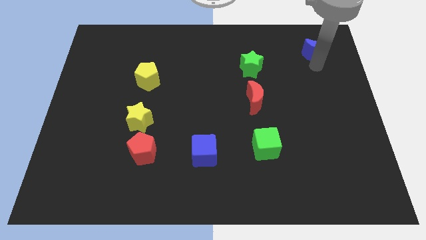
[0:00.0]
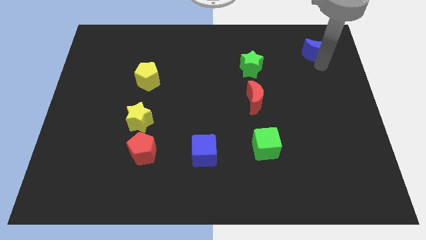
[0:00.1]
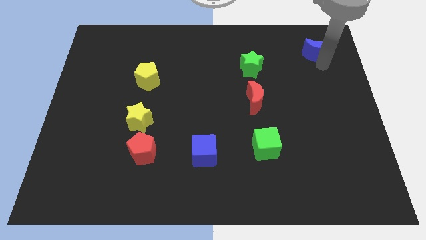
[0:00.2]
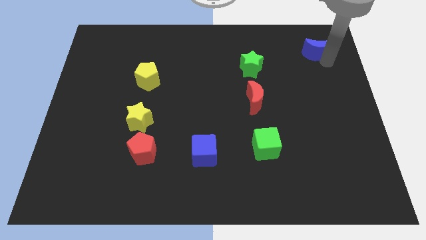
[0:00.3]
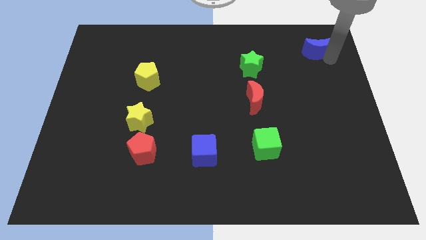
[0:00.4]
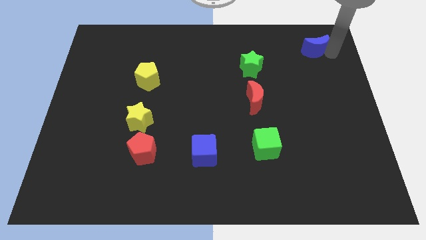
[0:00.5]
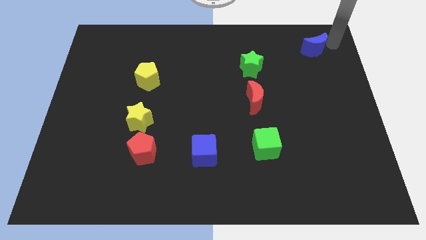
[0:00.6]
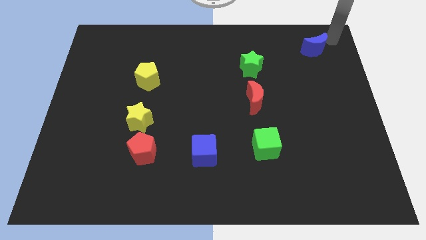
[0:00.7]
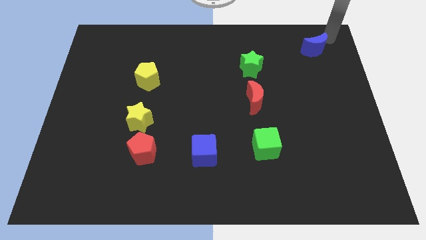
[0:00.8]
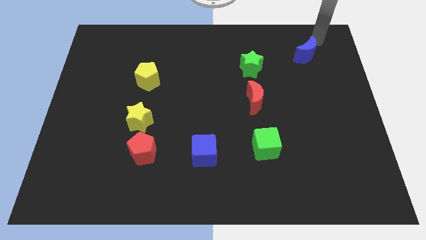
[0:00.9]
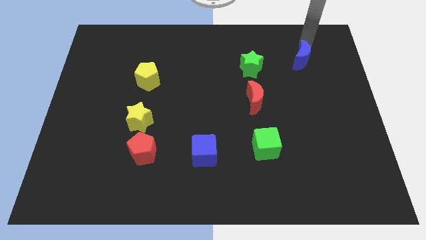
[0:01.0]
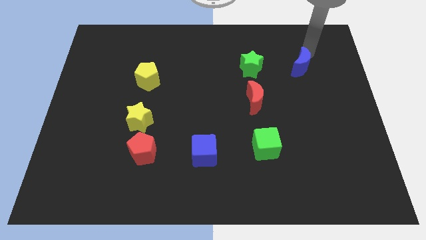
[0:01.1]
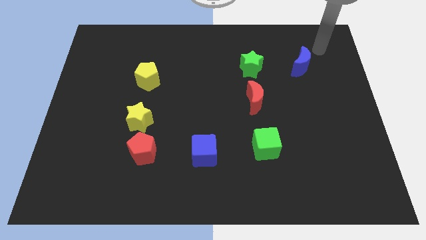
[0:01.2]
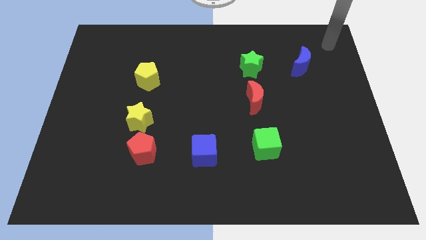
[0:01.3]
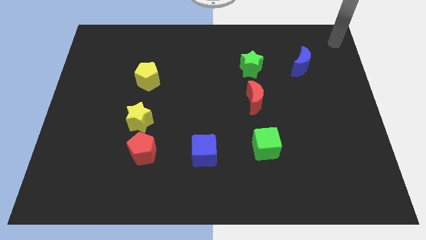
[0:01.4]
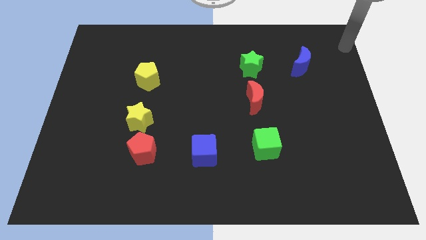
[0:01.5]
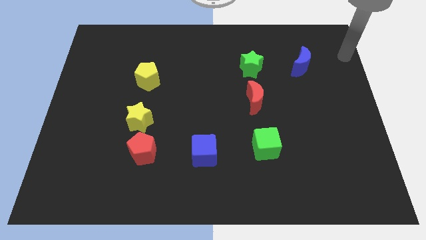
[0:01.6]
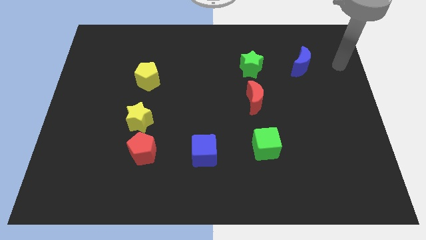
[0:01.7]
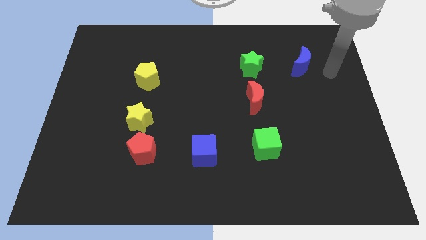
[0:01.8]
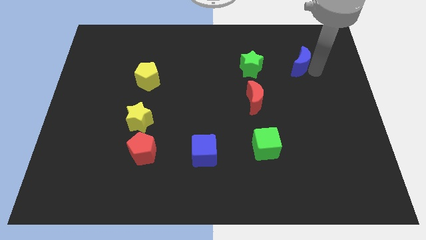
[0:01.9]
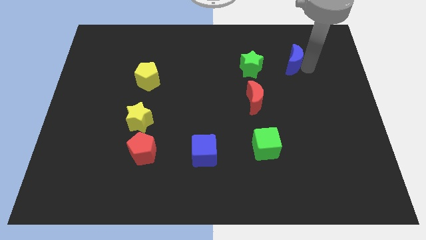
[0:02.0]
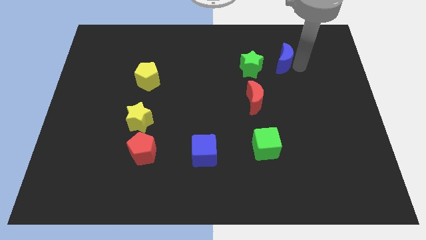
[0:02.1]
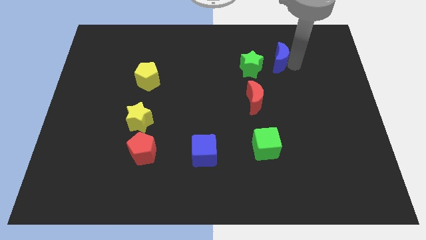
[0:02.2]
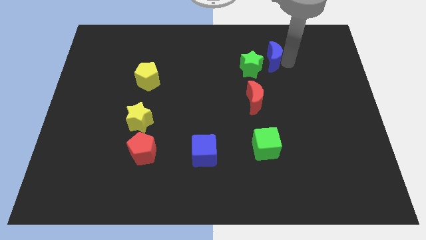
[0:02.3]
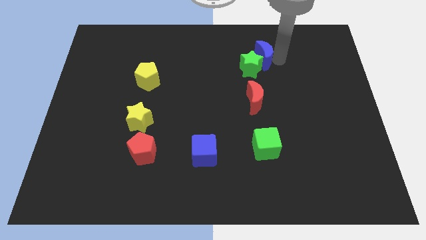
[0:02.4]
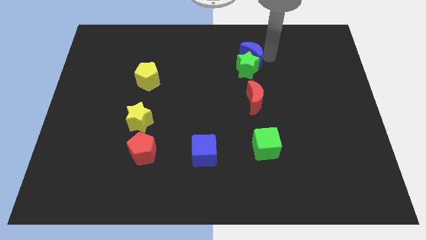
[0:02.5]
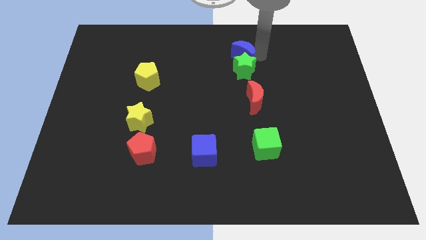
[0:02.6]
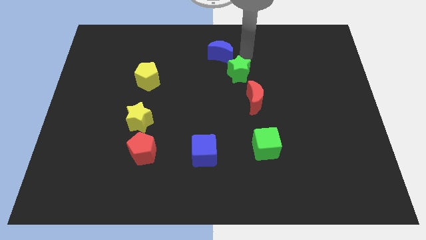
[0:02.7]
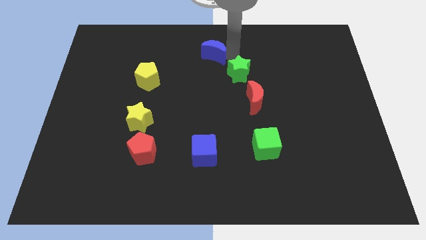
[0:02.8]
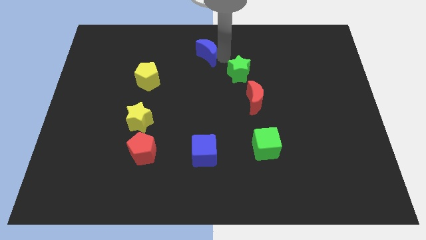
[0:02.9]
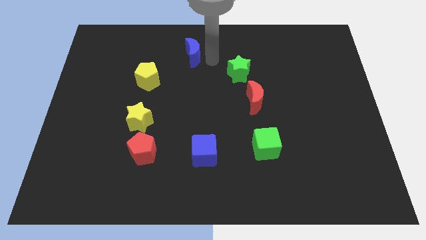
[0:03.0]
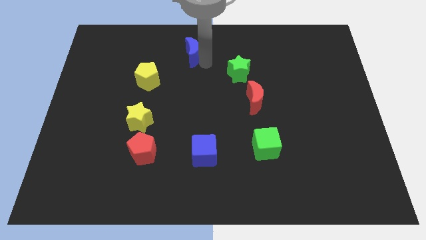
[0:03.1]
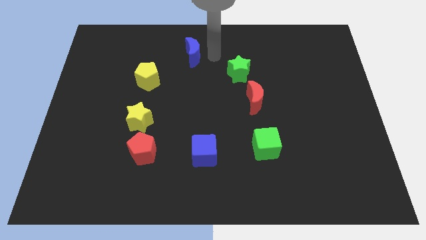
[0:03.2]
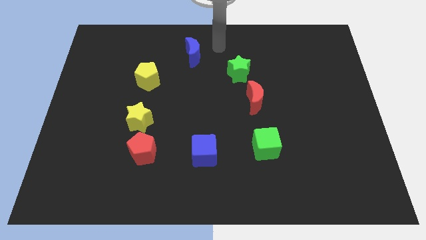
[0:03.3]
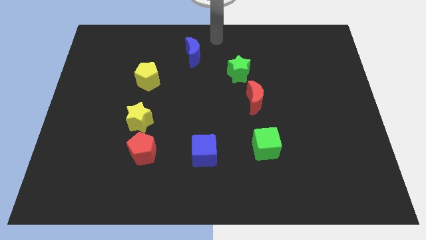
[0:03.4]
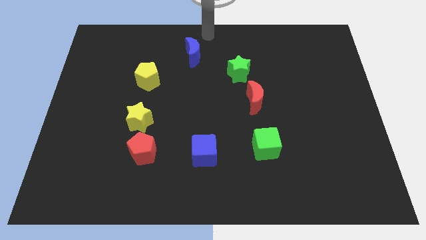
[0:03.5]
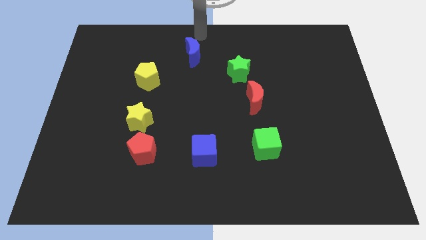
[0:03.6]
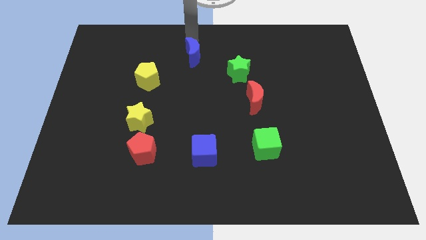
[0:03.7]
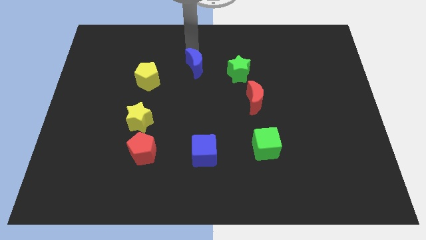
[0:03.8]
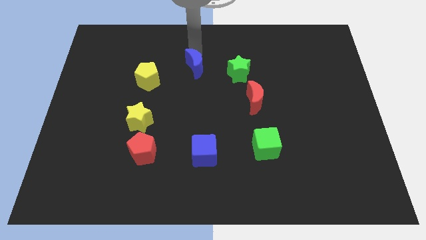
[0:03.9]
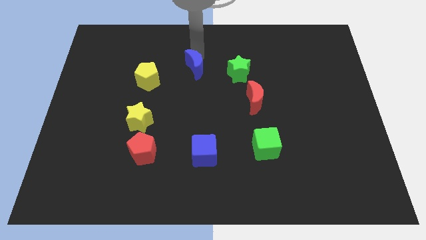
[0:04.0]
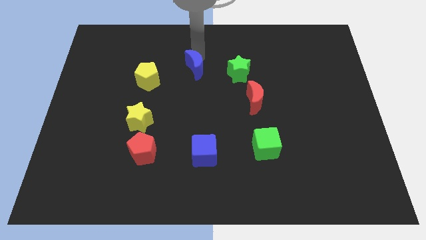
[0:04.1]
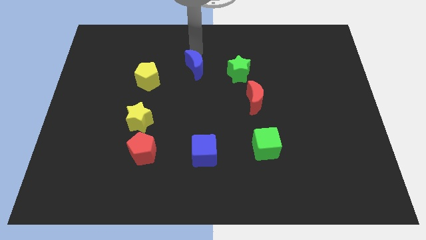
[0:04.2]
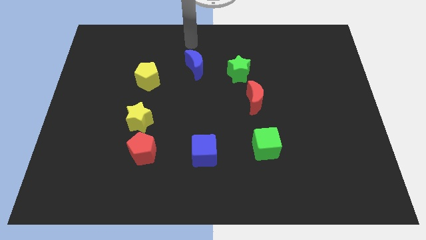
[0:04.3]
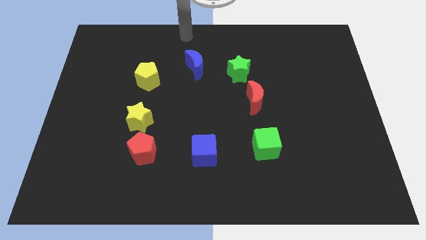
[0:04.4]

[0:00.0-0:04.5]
place the red moon to the center

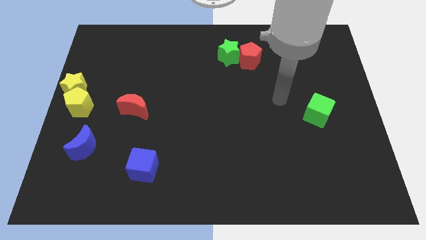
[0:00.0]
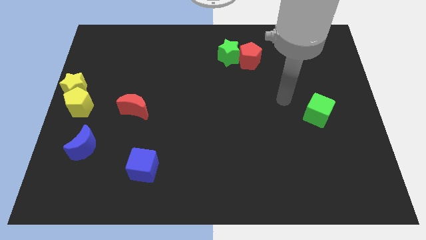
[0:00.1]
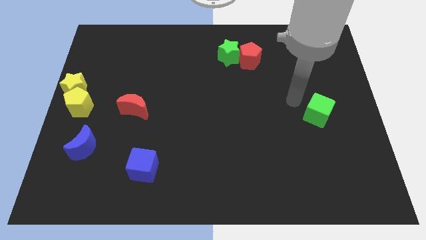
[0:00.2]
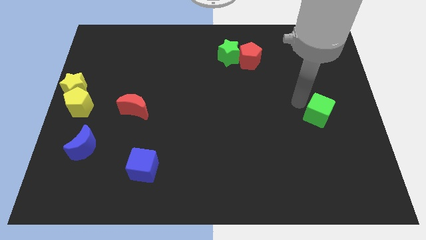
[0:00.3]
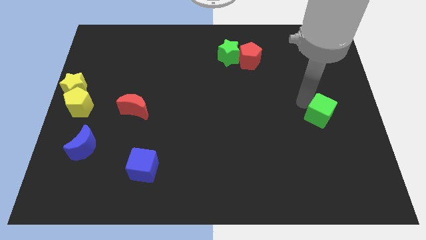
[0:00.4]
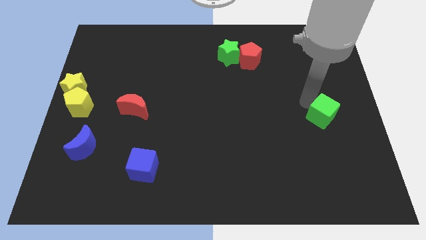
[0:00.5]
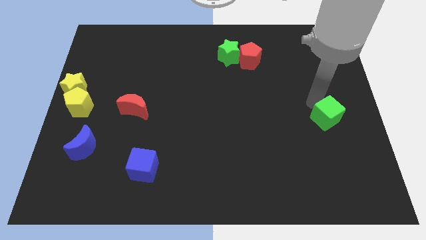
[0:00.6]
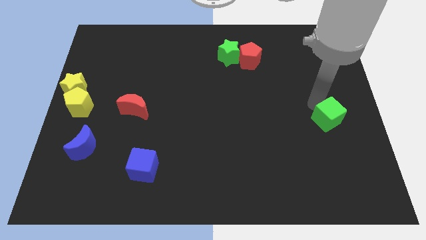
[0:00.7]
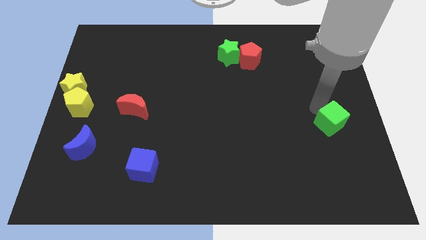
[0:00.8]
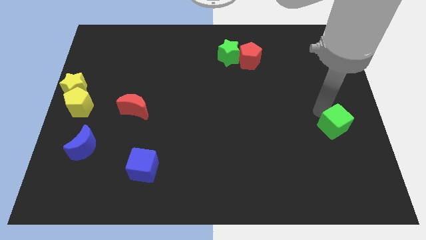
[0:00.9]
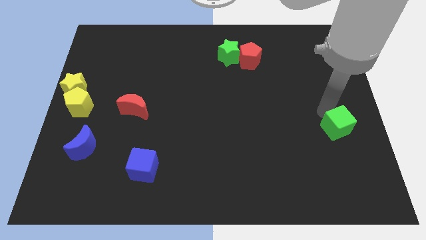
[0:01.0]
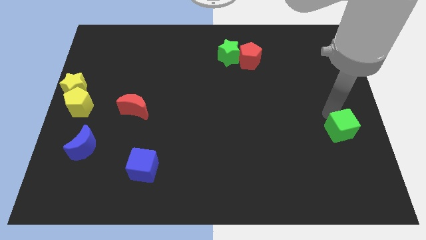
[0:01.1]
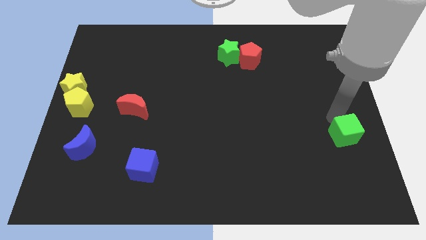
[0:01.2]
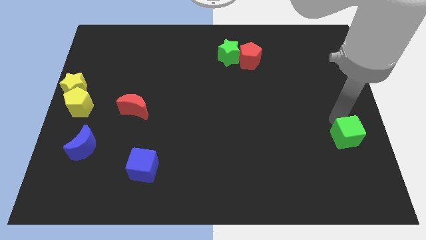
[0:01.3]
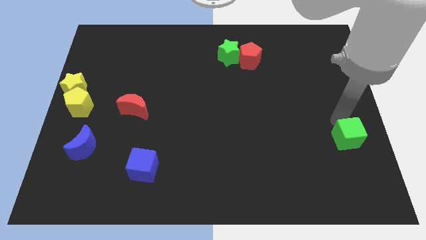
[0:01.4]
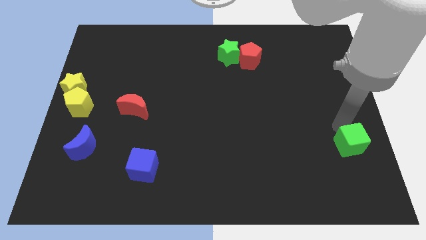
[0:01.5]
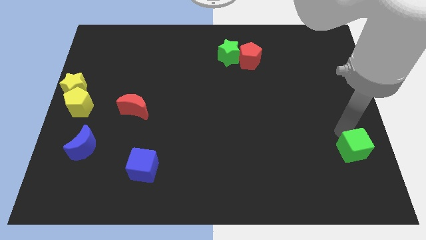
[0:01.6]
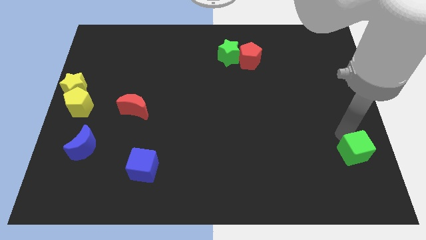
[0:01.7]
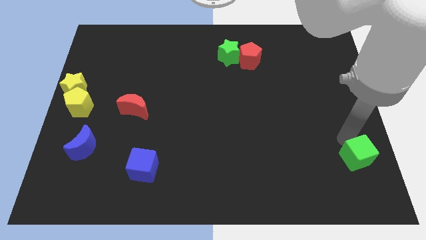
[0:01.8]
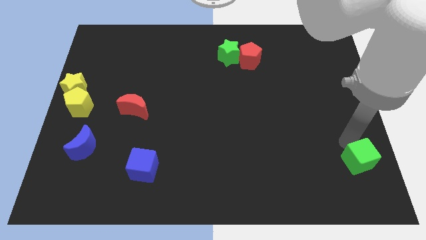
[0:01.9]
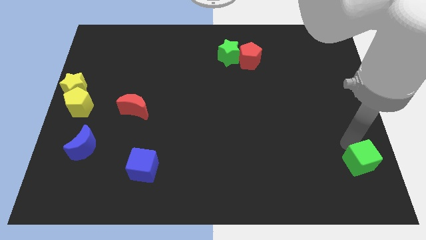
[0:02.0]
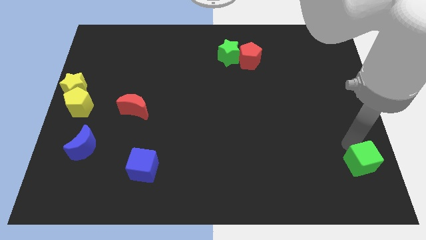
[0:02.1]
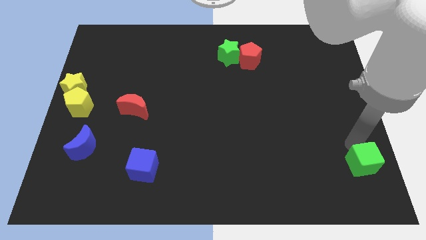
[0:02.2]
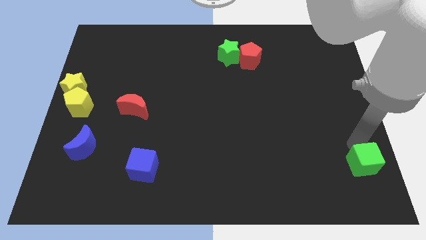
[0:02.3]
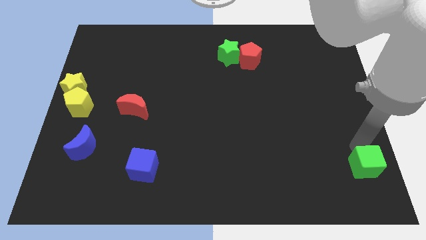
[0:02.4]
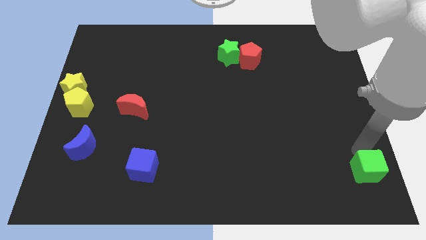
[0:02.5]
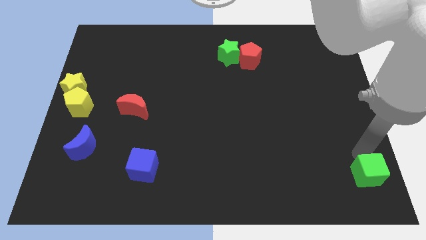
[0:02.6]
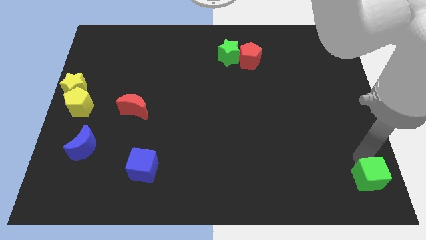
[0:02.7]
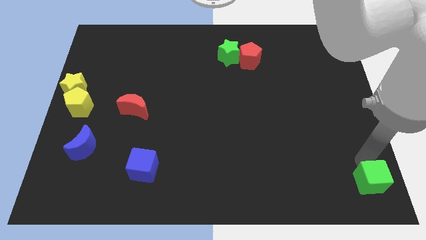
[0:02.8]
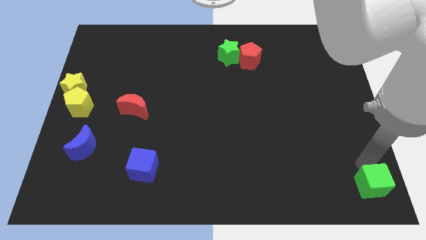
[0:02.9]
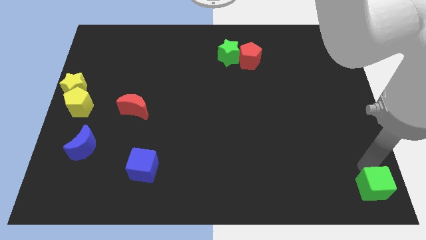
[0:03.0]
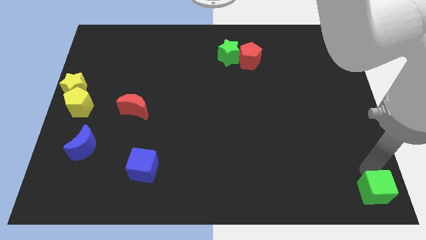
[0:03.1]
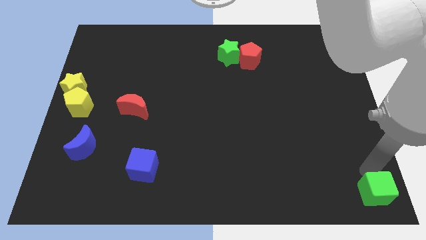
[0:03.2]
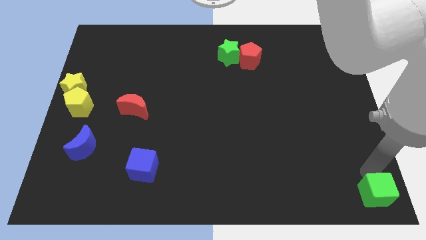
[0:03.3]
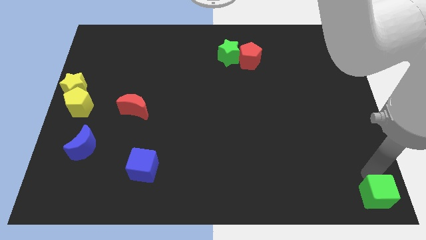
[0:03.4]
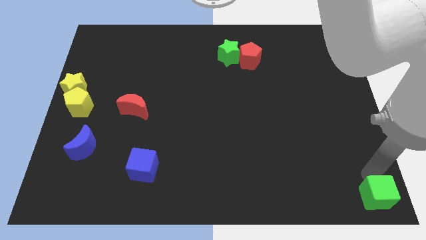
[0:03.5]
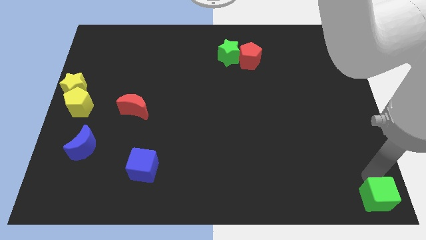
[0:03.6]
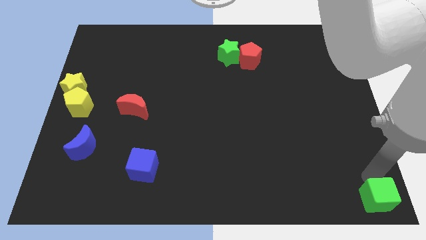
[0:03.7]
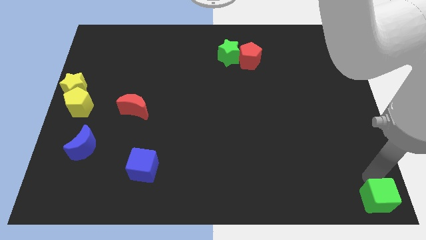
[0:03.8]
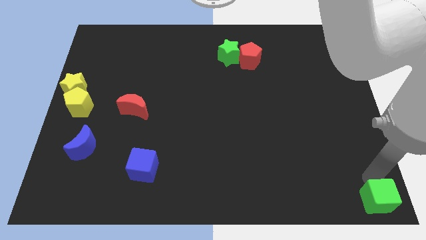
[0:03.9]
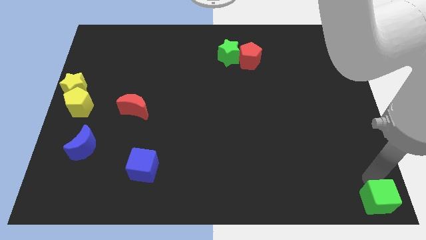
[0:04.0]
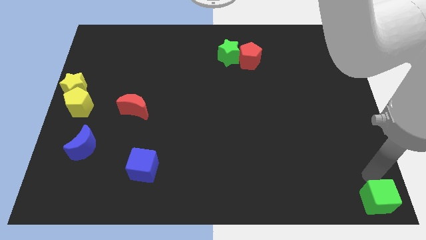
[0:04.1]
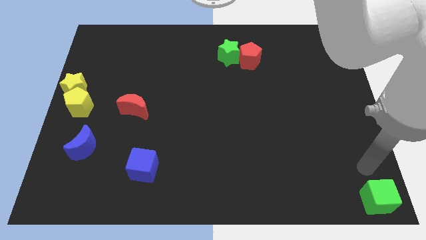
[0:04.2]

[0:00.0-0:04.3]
push the green cube to the right bottom of board
